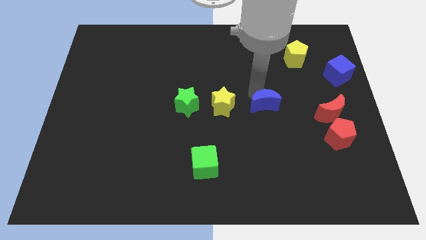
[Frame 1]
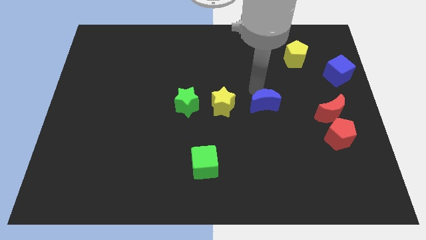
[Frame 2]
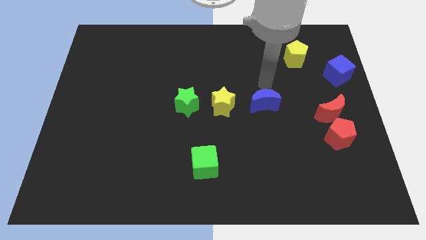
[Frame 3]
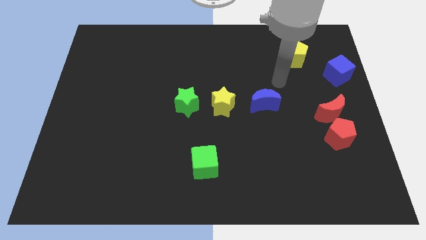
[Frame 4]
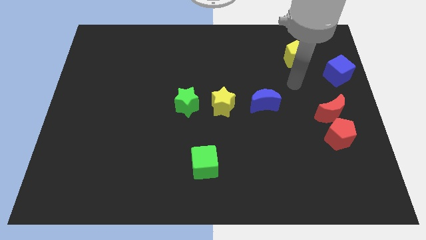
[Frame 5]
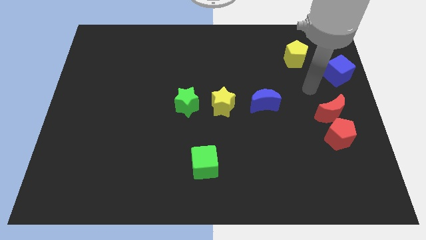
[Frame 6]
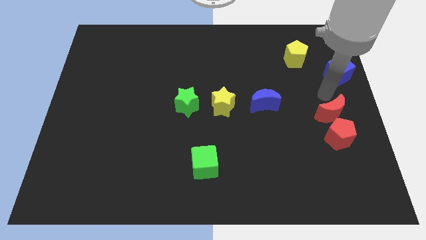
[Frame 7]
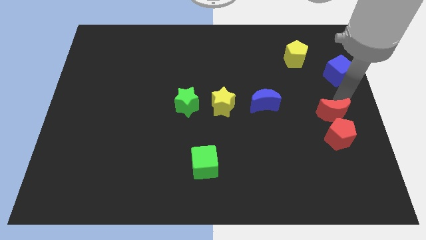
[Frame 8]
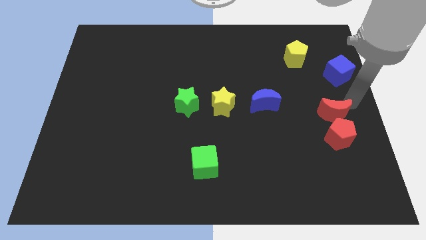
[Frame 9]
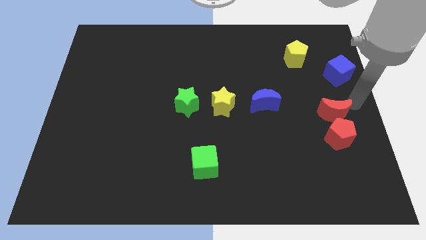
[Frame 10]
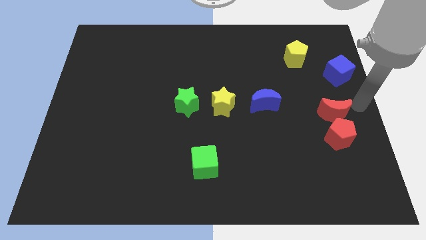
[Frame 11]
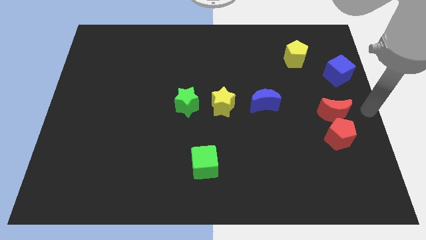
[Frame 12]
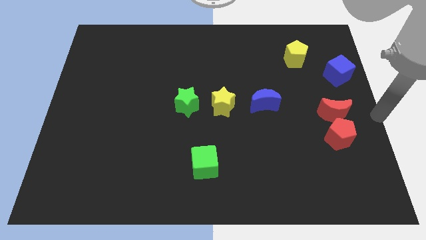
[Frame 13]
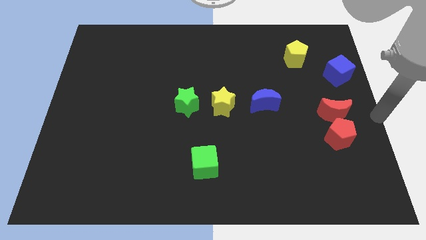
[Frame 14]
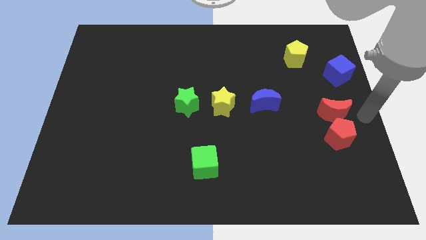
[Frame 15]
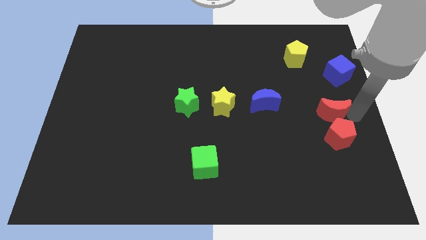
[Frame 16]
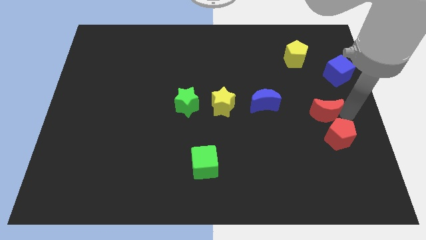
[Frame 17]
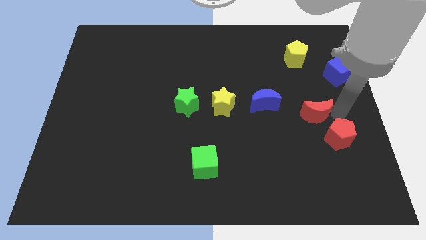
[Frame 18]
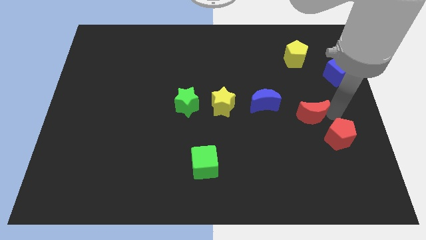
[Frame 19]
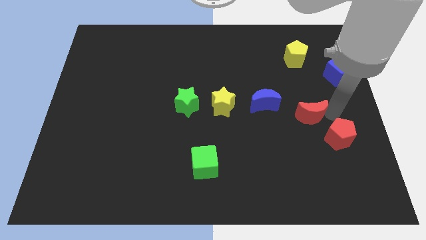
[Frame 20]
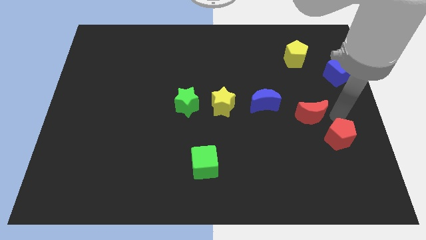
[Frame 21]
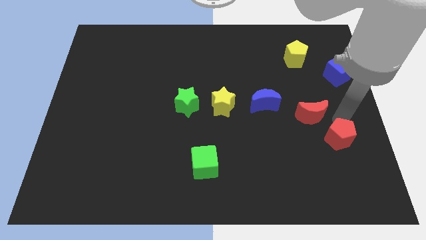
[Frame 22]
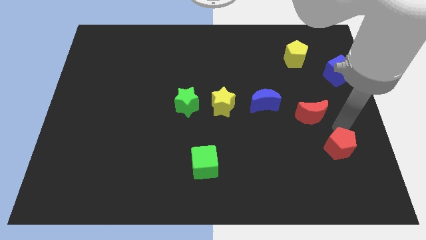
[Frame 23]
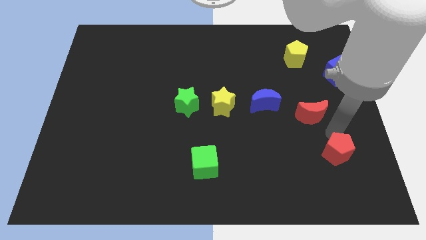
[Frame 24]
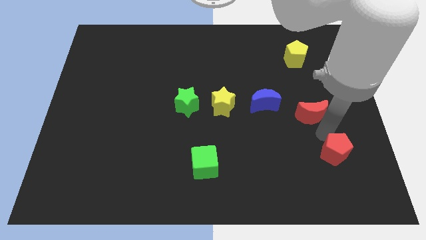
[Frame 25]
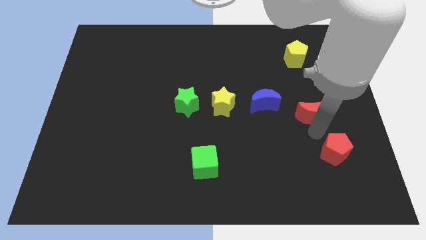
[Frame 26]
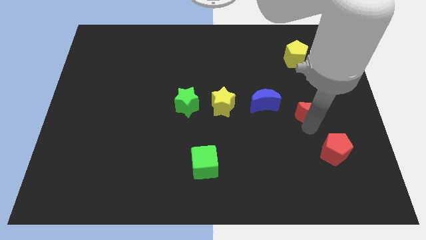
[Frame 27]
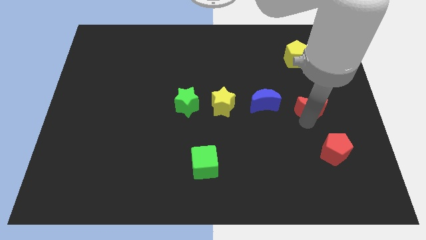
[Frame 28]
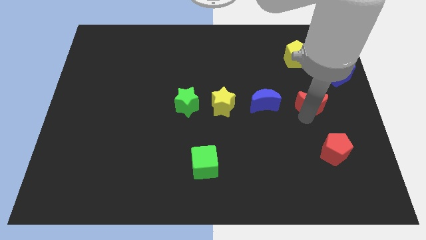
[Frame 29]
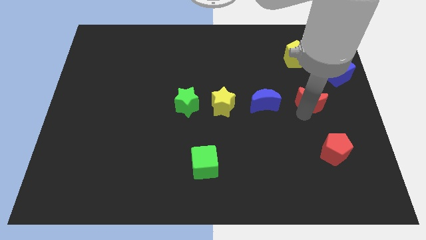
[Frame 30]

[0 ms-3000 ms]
separate the red moon away from red pentagon

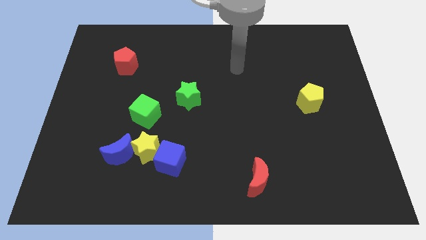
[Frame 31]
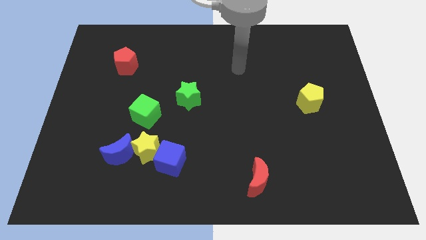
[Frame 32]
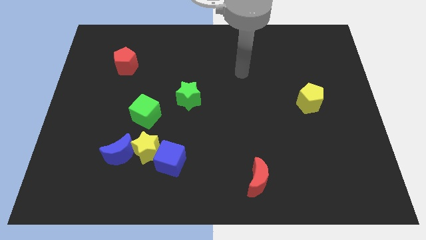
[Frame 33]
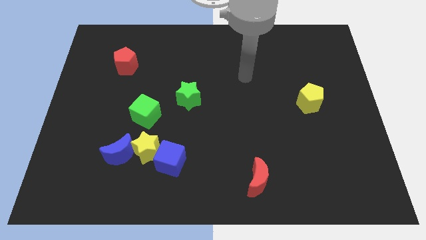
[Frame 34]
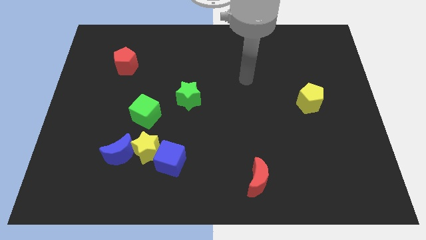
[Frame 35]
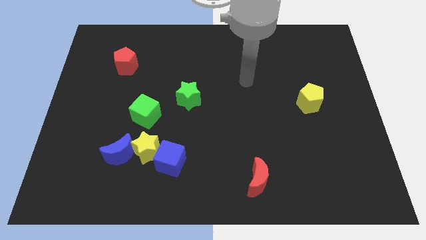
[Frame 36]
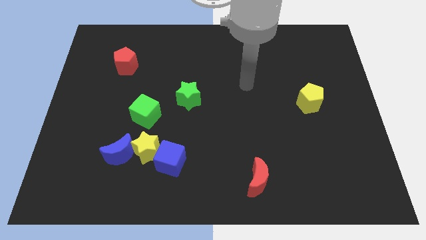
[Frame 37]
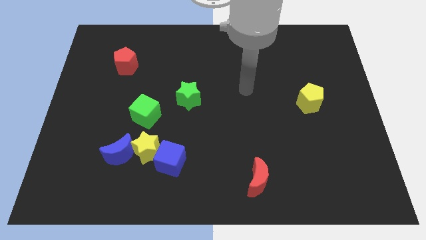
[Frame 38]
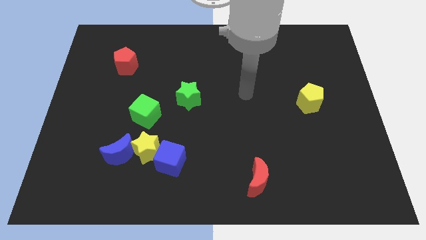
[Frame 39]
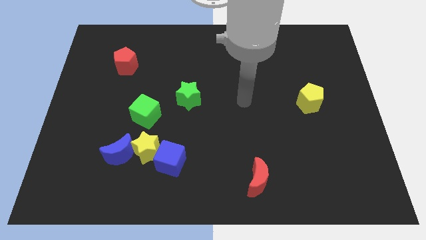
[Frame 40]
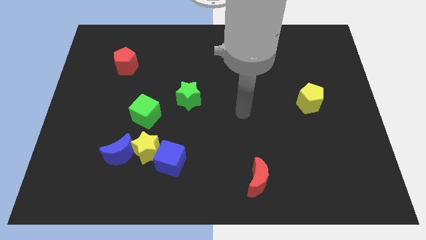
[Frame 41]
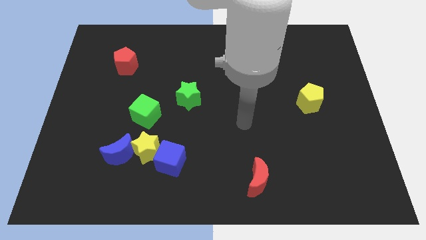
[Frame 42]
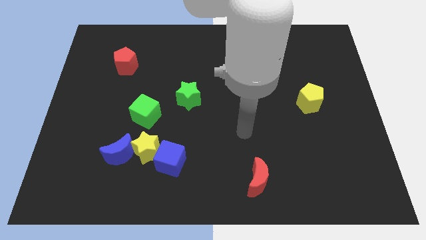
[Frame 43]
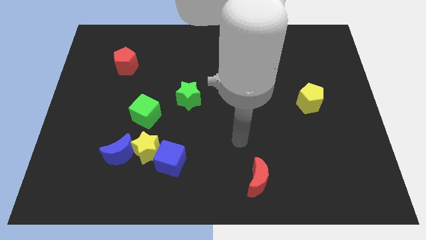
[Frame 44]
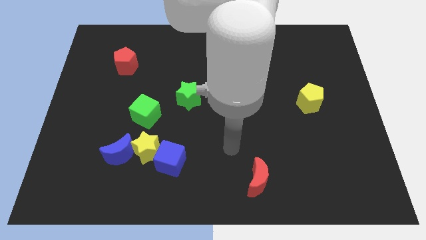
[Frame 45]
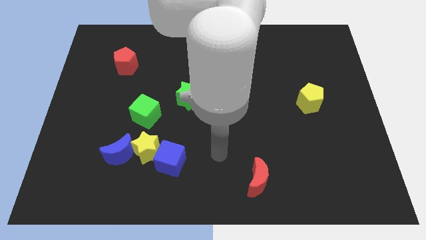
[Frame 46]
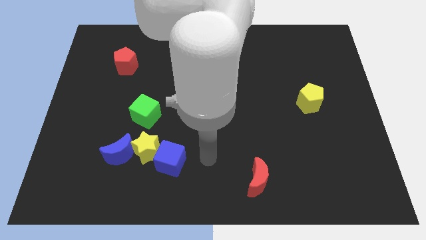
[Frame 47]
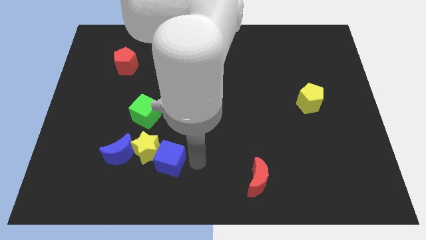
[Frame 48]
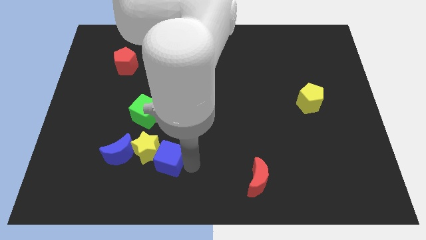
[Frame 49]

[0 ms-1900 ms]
place the arm at the right side of the blue cube

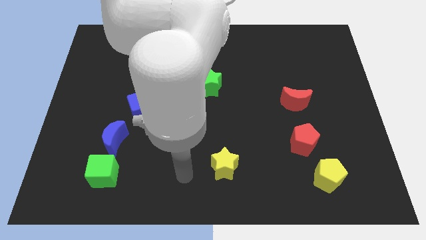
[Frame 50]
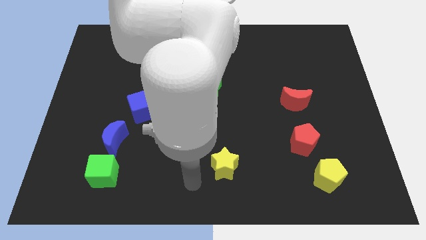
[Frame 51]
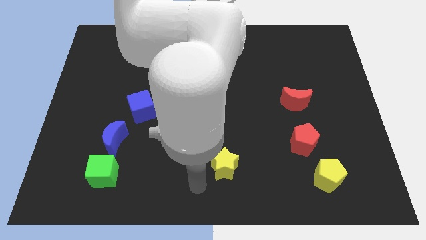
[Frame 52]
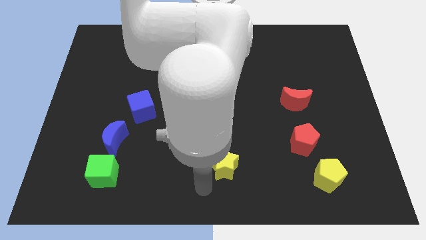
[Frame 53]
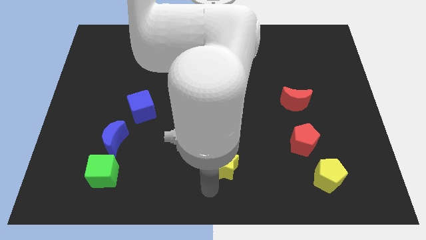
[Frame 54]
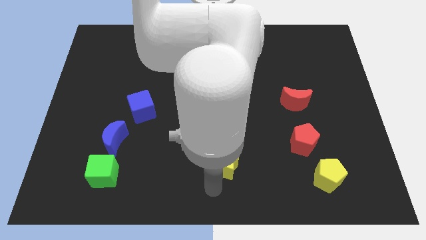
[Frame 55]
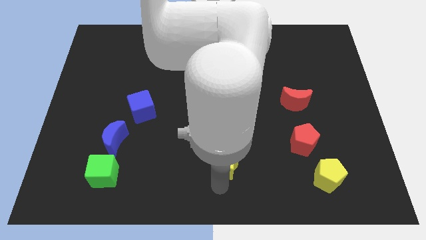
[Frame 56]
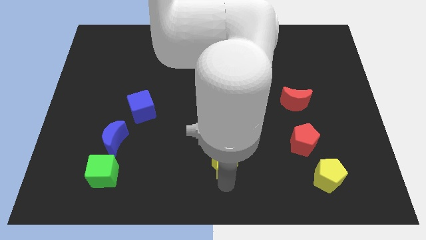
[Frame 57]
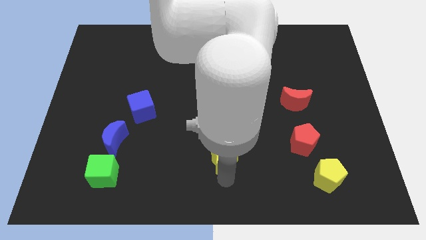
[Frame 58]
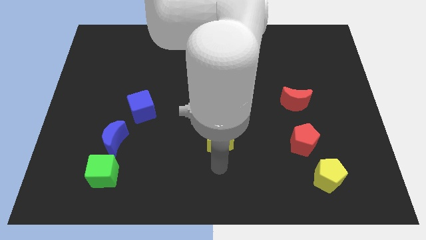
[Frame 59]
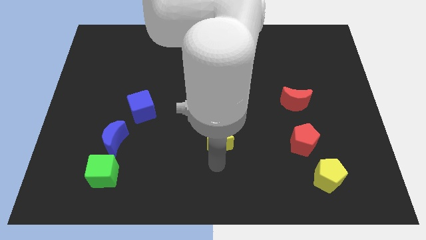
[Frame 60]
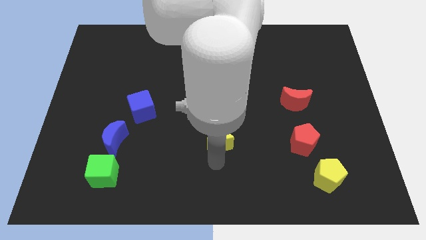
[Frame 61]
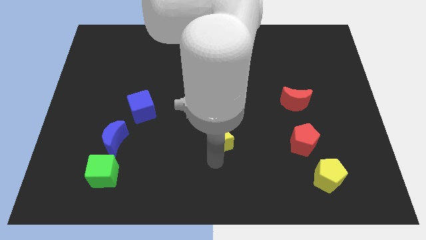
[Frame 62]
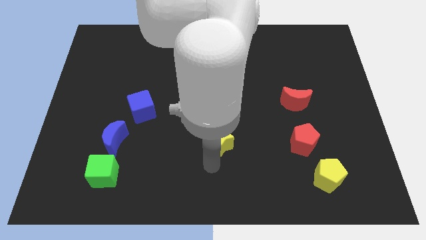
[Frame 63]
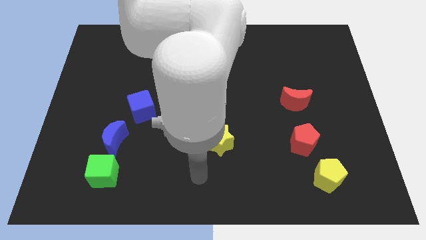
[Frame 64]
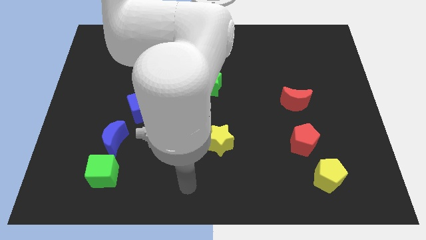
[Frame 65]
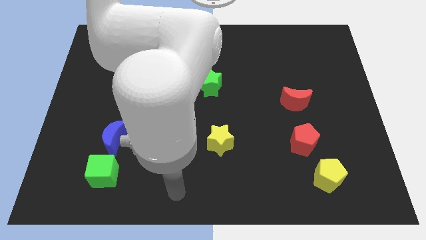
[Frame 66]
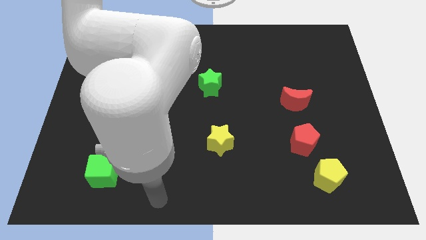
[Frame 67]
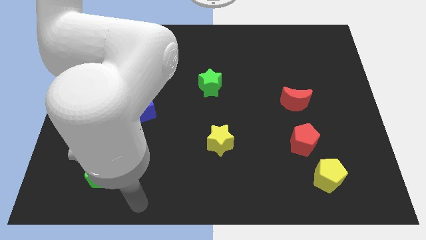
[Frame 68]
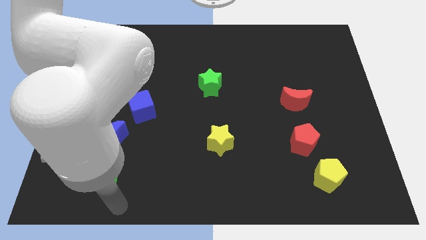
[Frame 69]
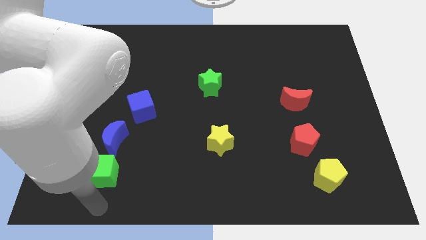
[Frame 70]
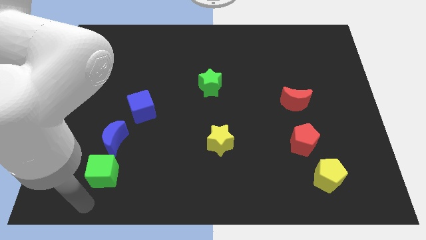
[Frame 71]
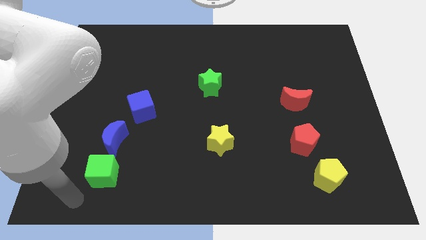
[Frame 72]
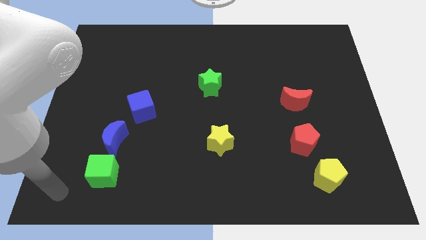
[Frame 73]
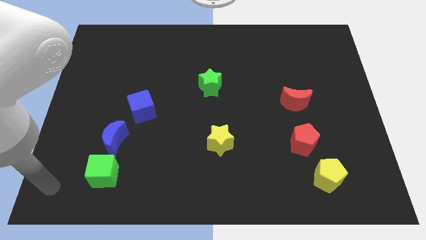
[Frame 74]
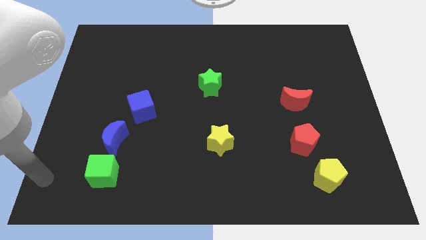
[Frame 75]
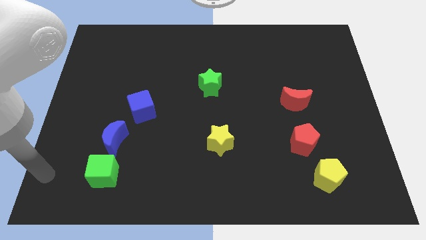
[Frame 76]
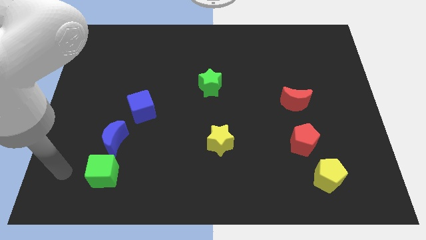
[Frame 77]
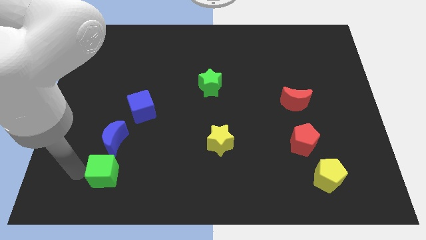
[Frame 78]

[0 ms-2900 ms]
move yellow star towards the green star

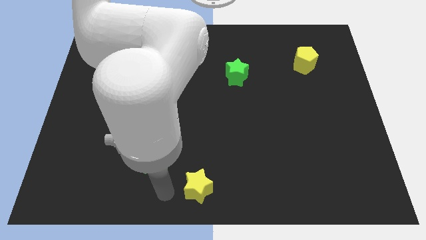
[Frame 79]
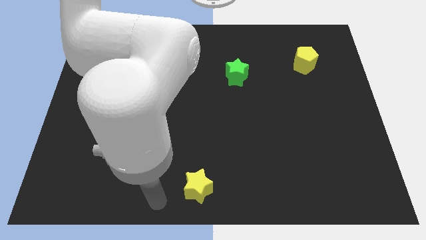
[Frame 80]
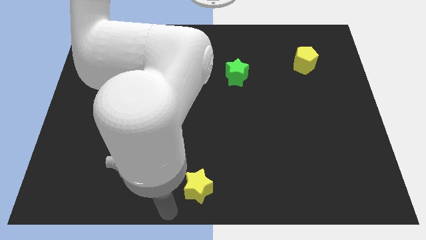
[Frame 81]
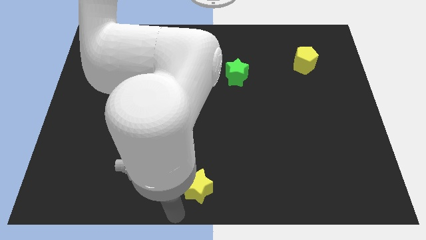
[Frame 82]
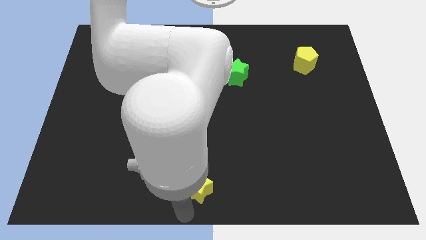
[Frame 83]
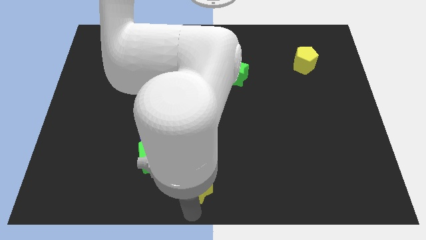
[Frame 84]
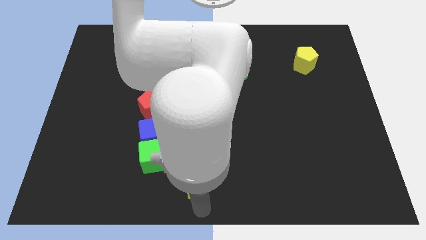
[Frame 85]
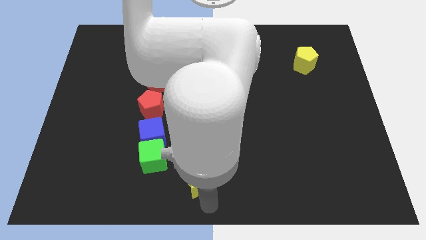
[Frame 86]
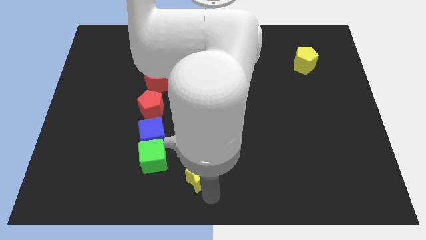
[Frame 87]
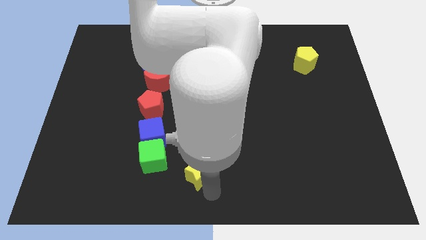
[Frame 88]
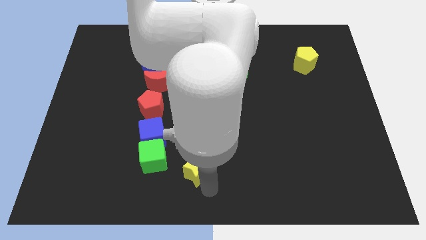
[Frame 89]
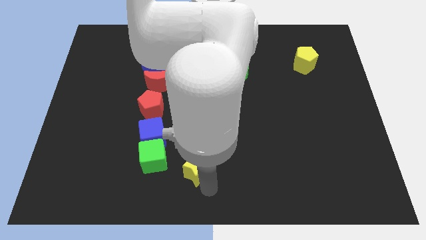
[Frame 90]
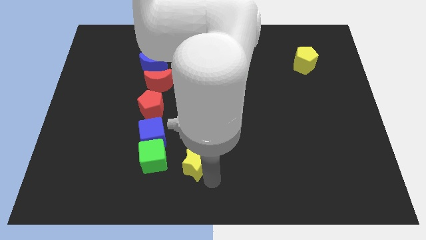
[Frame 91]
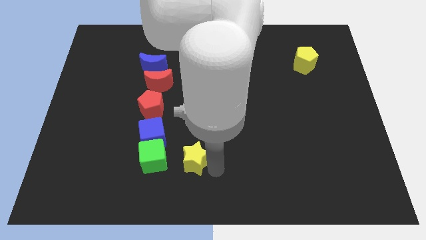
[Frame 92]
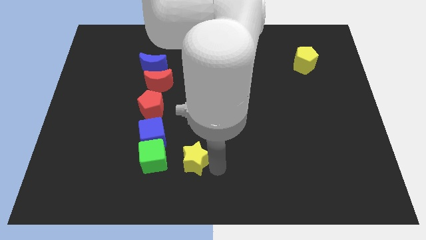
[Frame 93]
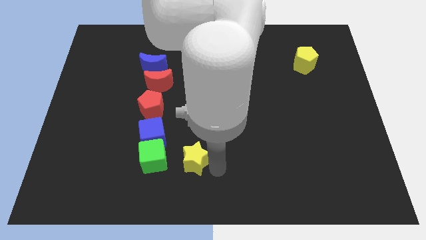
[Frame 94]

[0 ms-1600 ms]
push the yellow star to the right of the green cube
